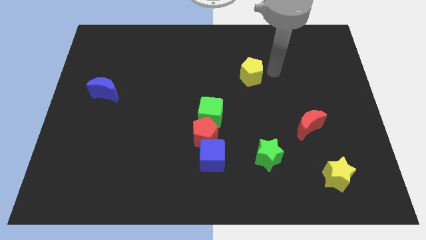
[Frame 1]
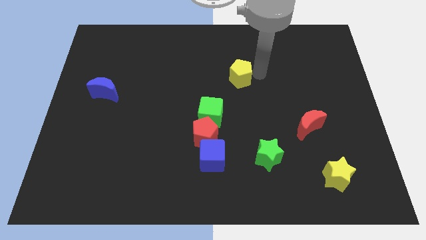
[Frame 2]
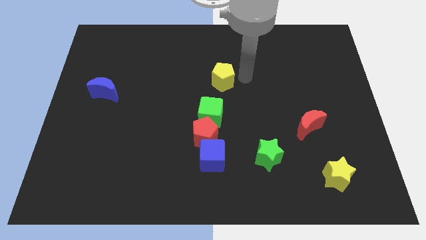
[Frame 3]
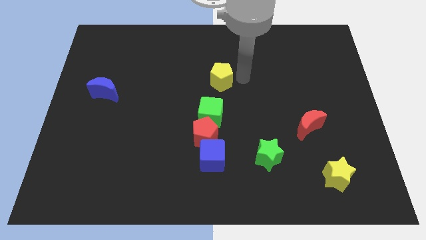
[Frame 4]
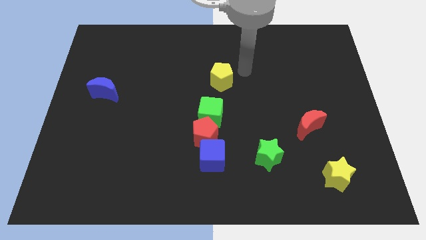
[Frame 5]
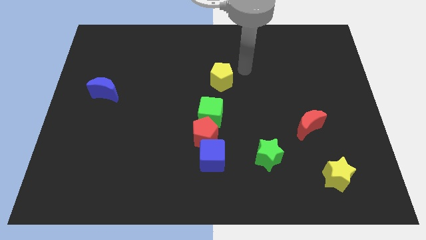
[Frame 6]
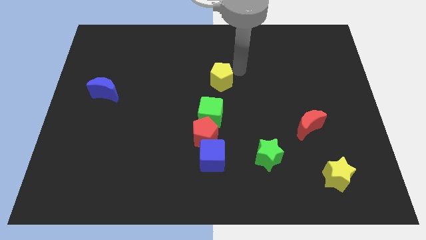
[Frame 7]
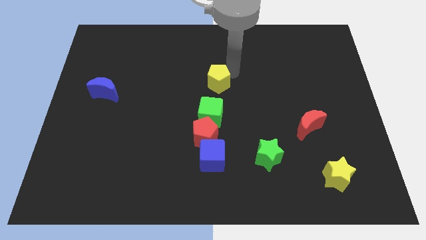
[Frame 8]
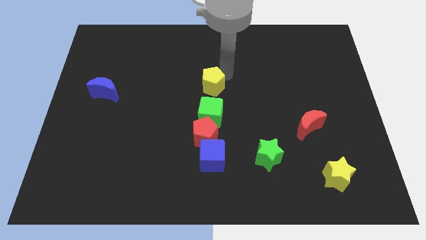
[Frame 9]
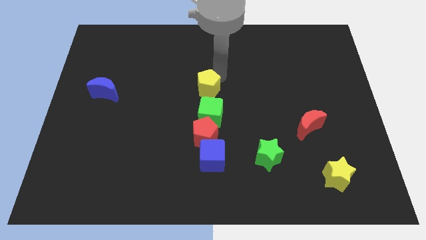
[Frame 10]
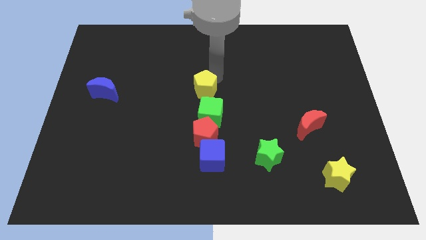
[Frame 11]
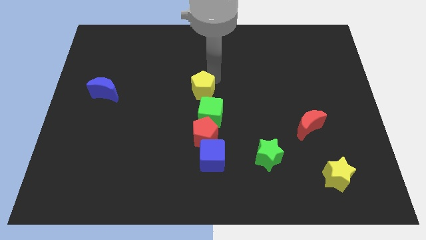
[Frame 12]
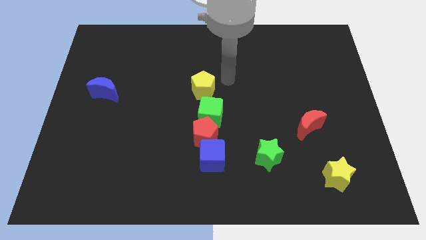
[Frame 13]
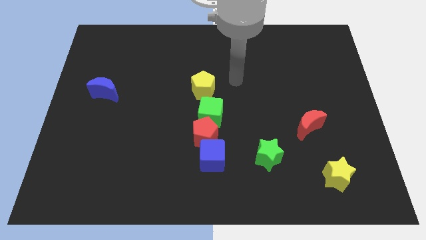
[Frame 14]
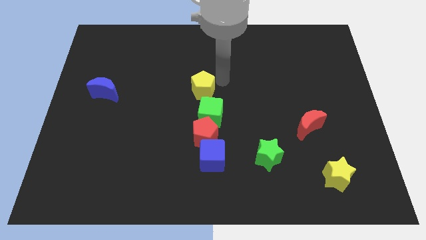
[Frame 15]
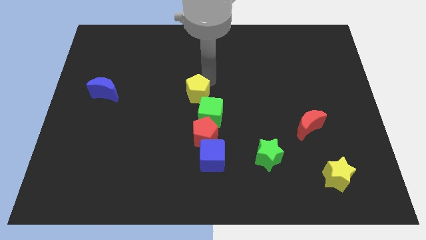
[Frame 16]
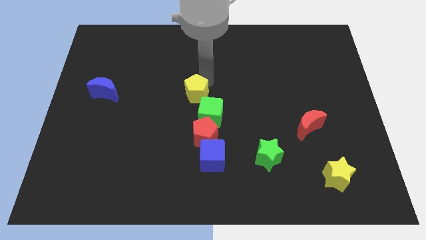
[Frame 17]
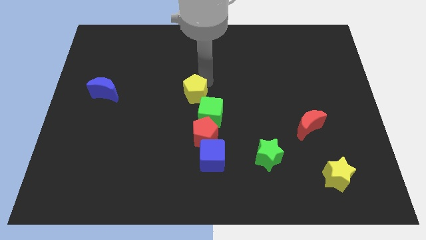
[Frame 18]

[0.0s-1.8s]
drag yellow pentagon to the left of the green cube

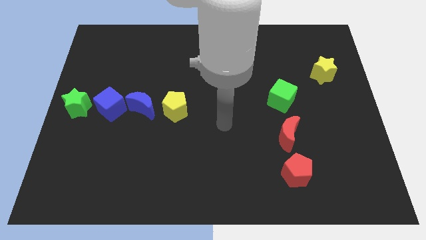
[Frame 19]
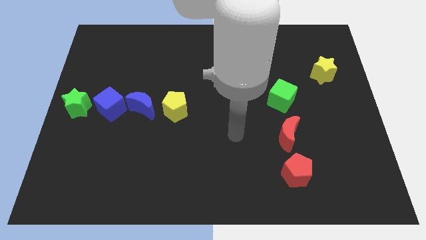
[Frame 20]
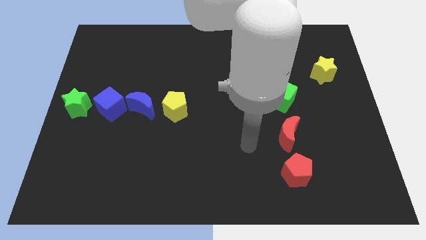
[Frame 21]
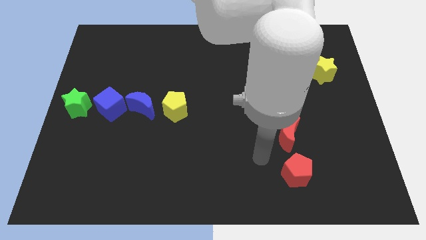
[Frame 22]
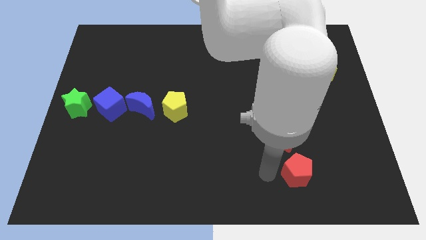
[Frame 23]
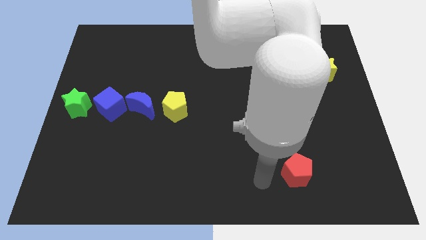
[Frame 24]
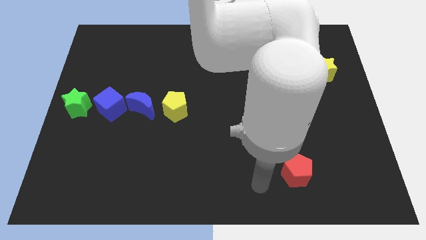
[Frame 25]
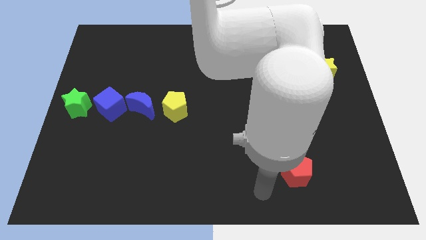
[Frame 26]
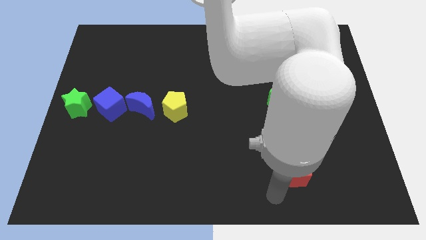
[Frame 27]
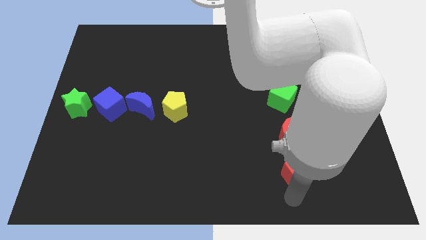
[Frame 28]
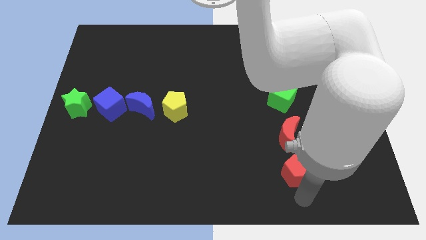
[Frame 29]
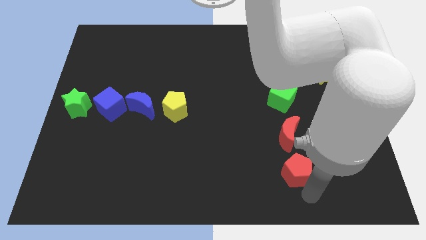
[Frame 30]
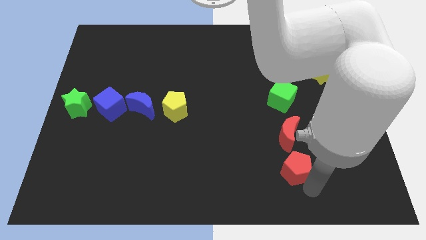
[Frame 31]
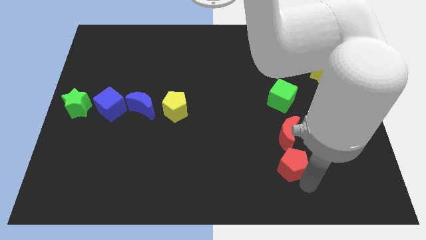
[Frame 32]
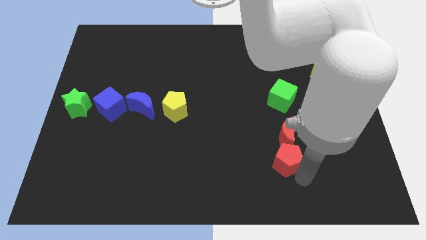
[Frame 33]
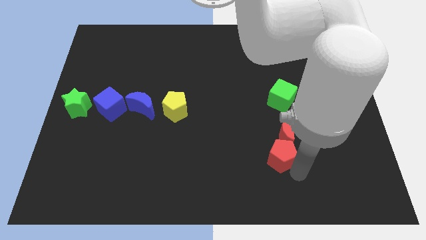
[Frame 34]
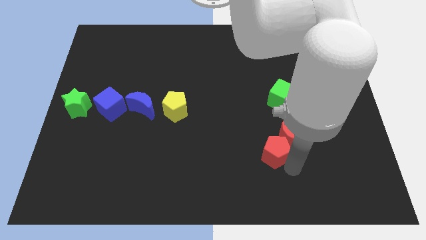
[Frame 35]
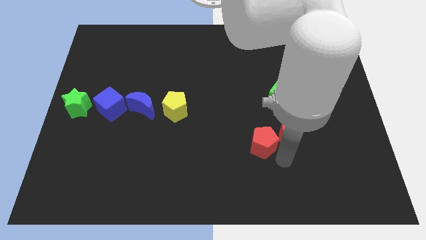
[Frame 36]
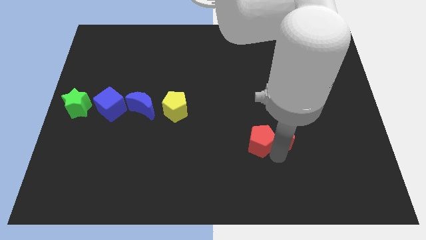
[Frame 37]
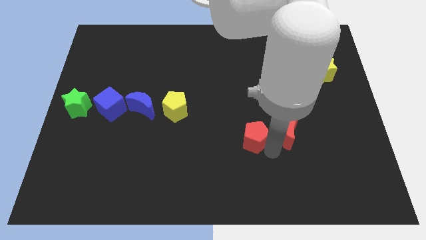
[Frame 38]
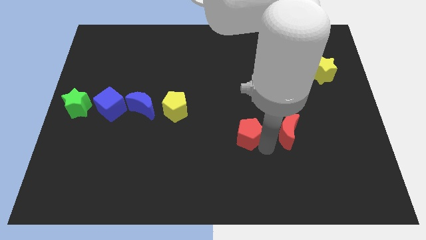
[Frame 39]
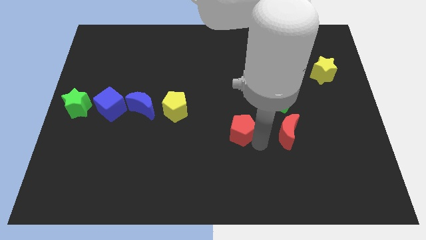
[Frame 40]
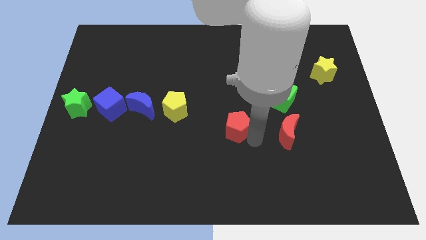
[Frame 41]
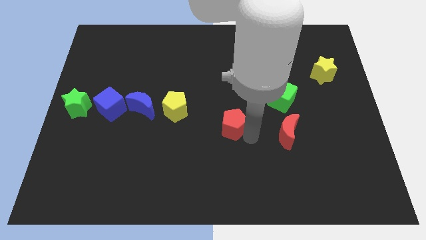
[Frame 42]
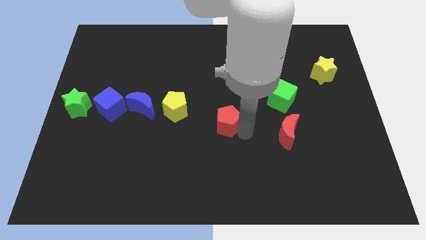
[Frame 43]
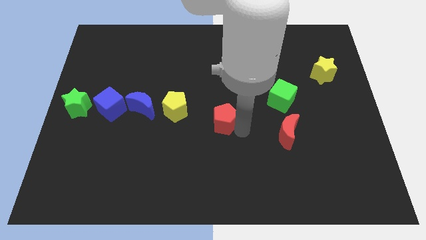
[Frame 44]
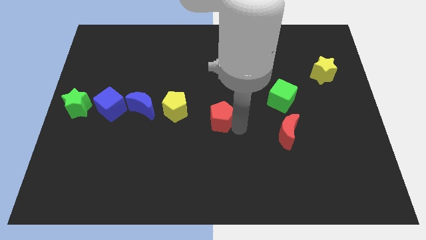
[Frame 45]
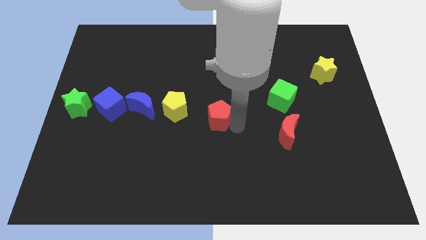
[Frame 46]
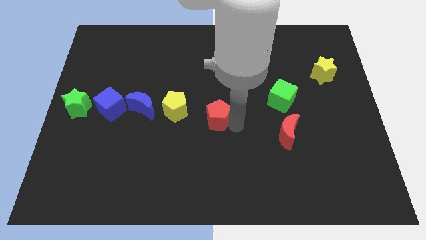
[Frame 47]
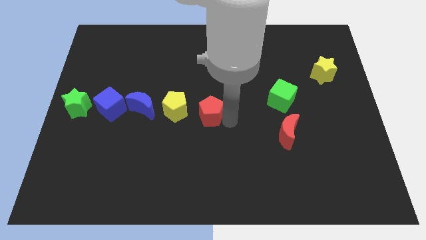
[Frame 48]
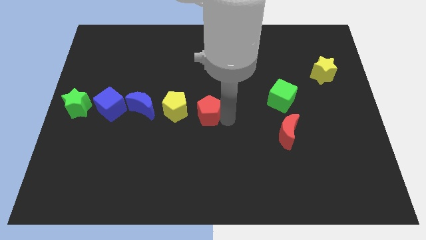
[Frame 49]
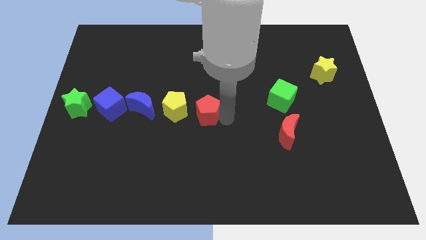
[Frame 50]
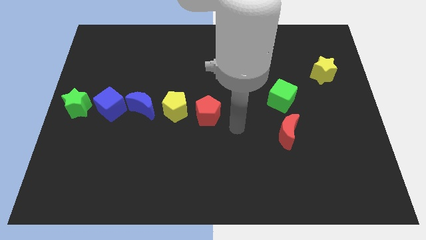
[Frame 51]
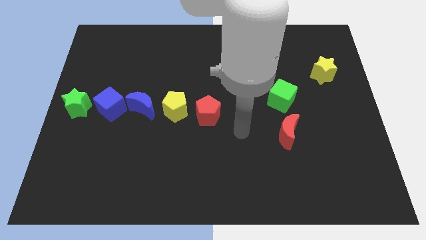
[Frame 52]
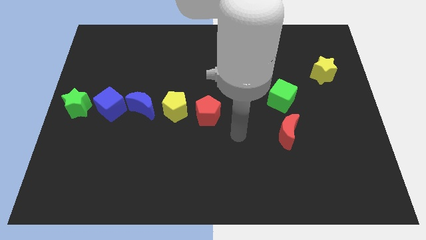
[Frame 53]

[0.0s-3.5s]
place the red pentagon at the center of the board

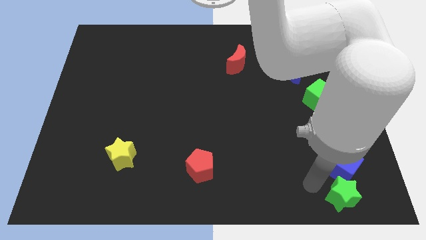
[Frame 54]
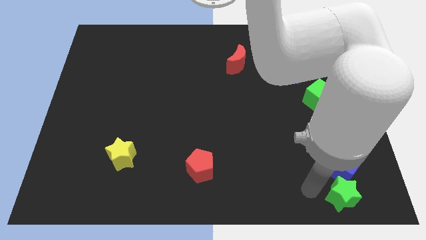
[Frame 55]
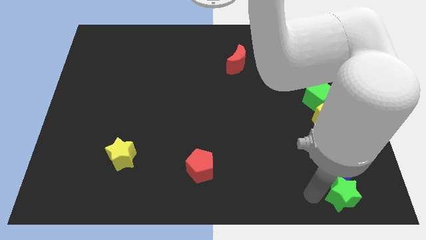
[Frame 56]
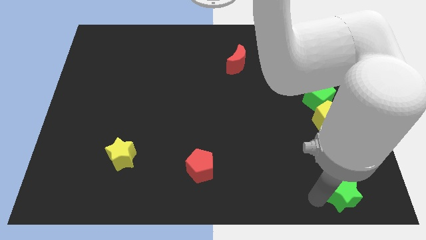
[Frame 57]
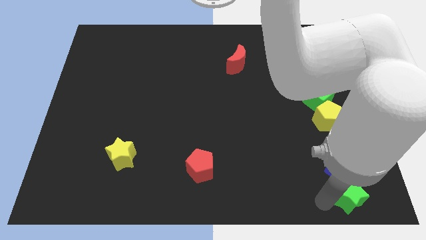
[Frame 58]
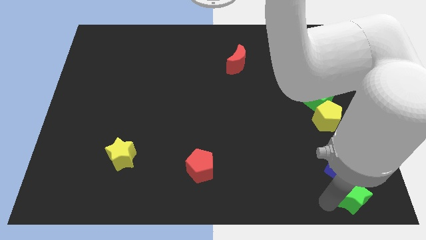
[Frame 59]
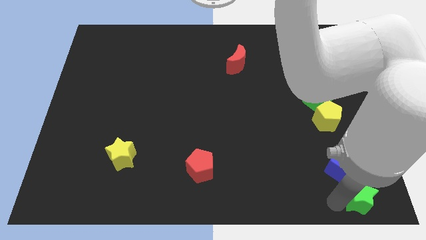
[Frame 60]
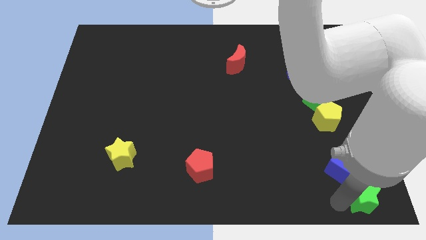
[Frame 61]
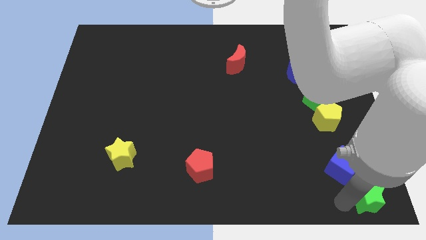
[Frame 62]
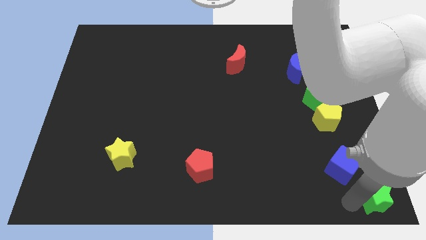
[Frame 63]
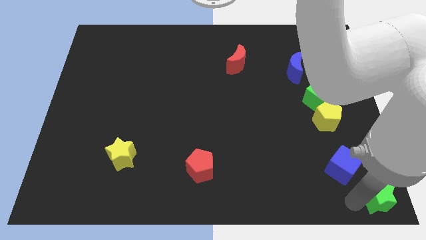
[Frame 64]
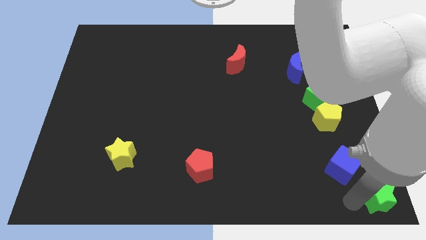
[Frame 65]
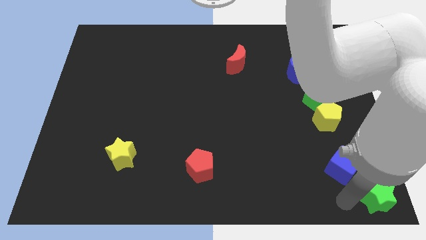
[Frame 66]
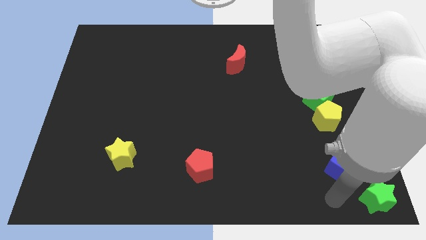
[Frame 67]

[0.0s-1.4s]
move the green star to the bottom right of the board

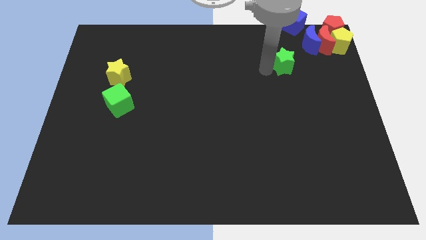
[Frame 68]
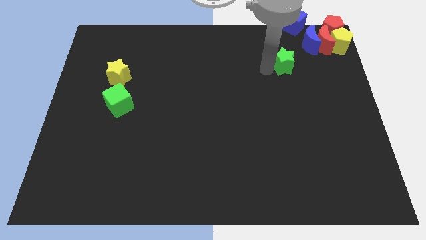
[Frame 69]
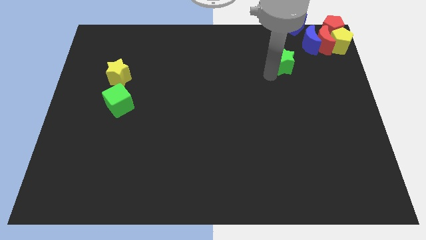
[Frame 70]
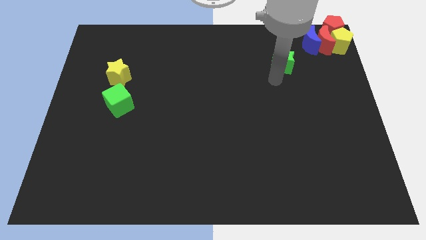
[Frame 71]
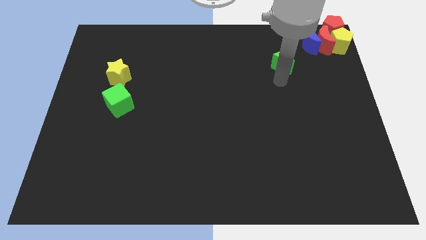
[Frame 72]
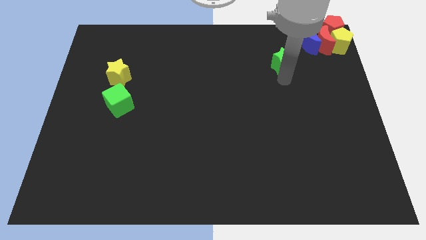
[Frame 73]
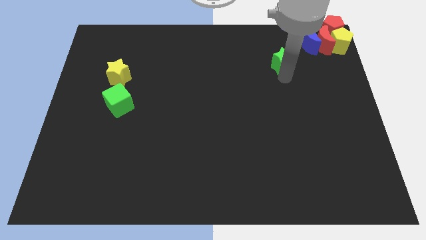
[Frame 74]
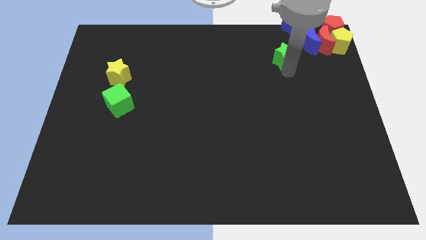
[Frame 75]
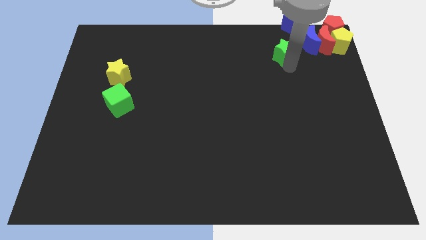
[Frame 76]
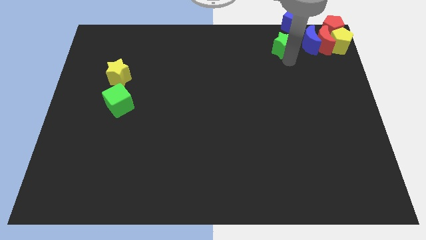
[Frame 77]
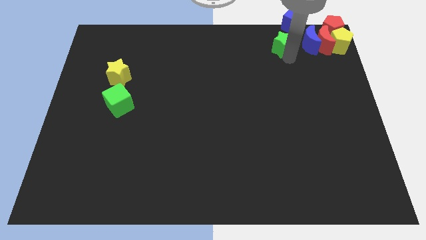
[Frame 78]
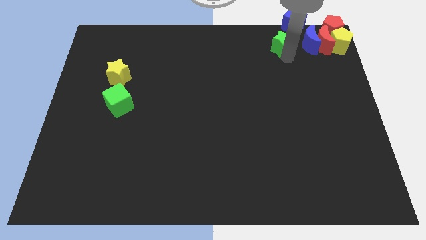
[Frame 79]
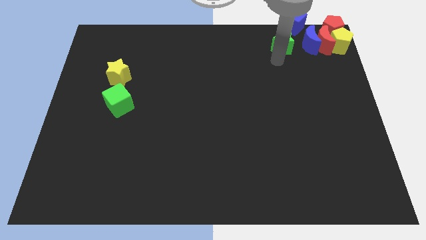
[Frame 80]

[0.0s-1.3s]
put the green star at the left side of the blue crescent

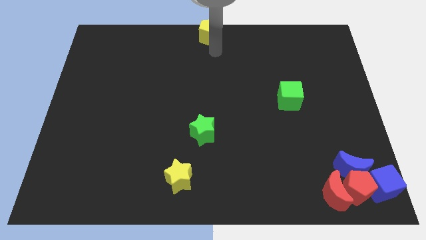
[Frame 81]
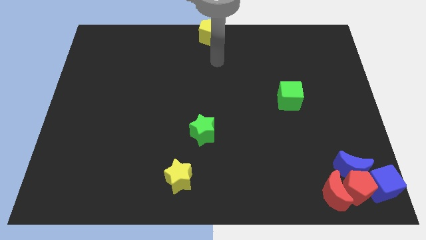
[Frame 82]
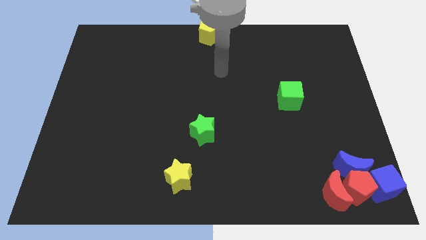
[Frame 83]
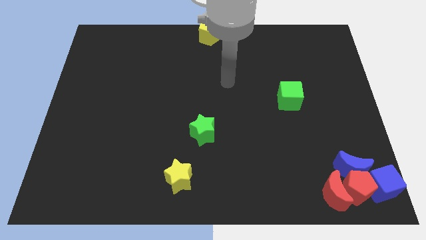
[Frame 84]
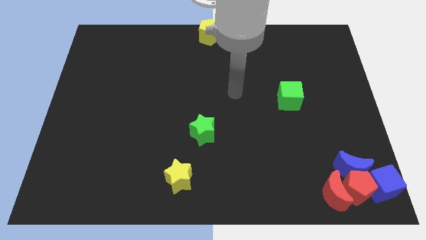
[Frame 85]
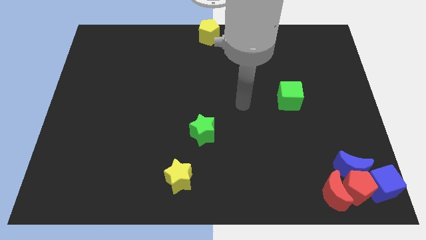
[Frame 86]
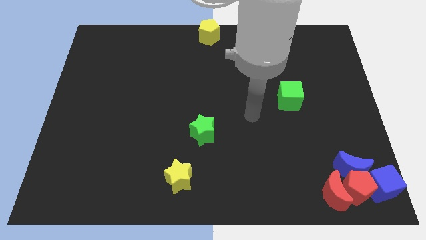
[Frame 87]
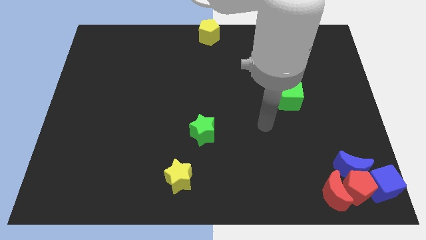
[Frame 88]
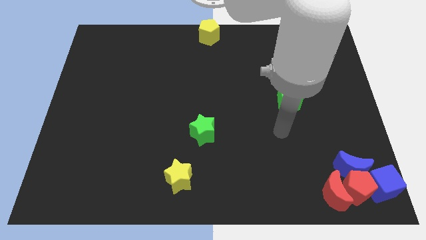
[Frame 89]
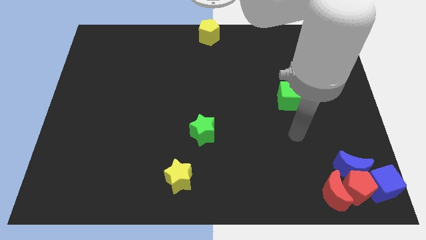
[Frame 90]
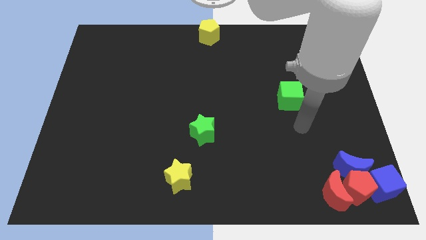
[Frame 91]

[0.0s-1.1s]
point the arm below the green cube
